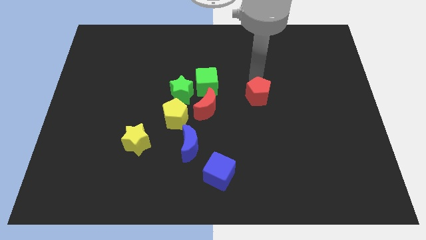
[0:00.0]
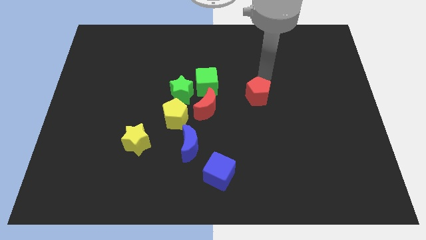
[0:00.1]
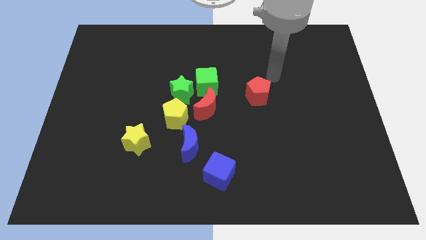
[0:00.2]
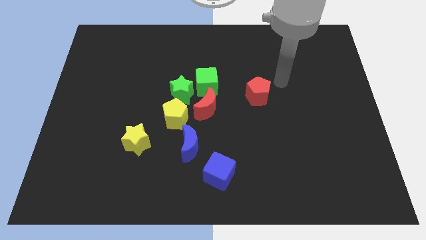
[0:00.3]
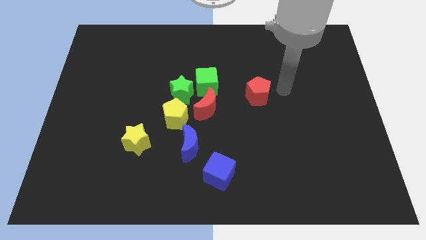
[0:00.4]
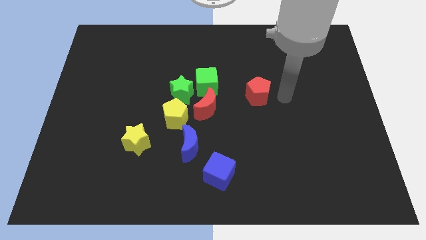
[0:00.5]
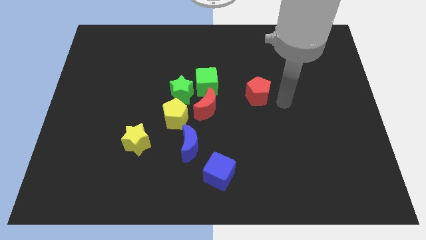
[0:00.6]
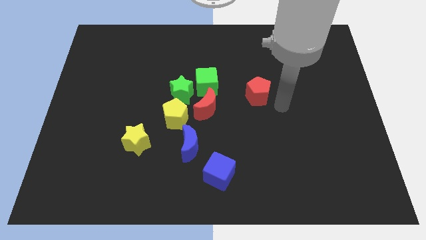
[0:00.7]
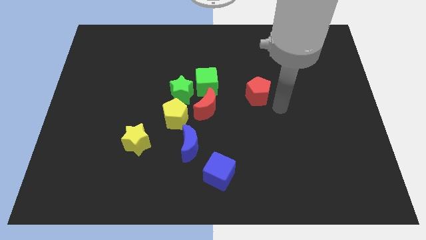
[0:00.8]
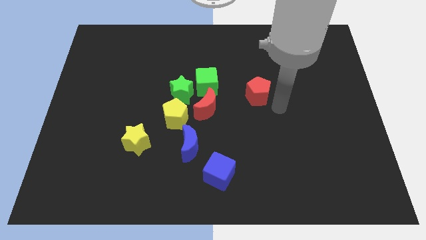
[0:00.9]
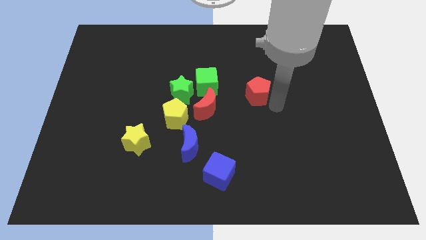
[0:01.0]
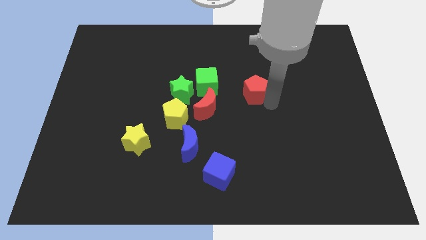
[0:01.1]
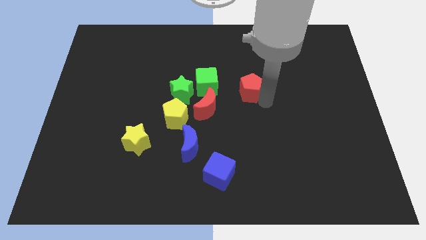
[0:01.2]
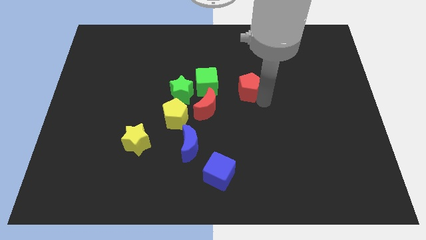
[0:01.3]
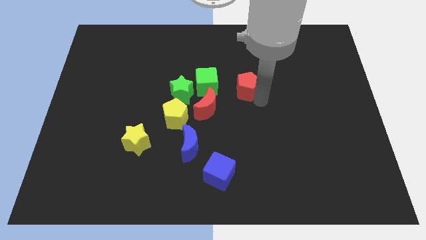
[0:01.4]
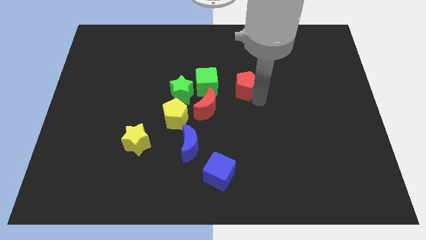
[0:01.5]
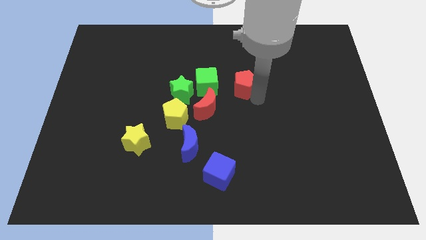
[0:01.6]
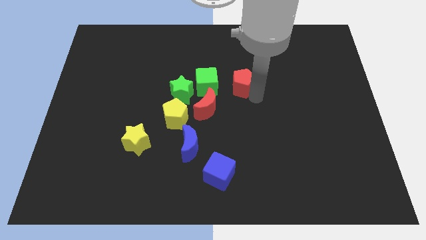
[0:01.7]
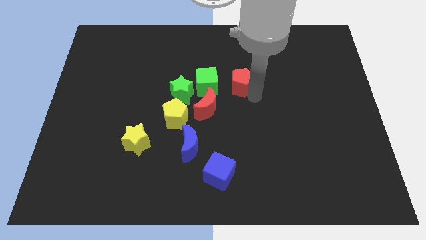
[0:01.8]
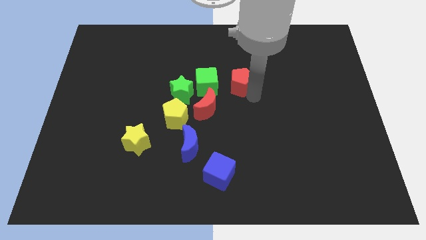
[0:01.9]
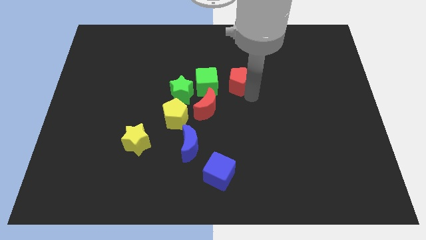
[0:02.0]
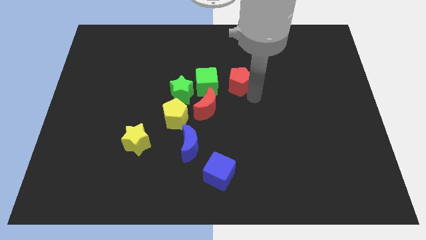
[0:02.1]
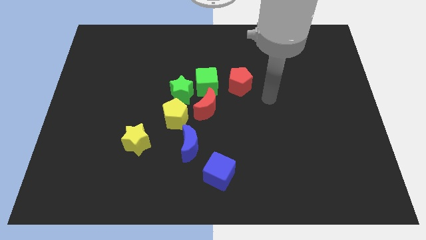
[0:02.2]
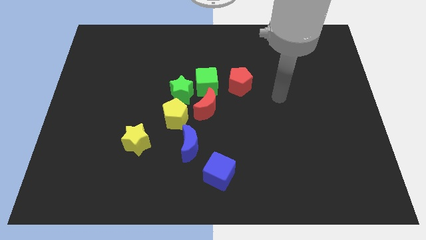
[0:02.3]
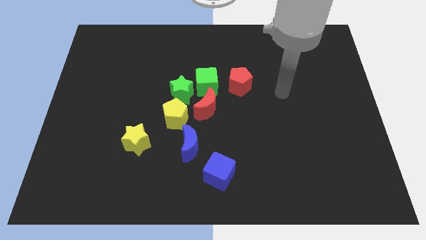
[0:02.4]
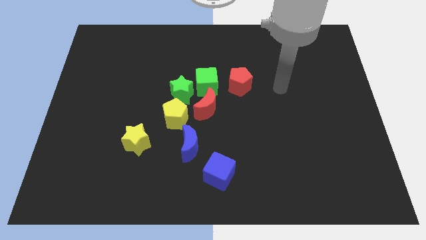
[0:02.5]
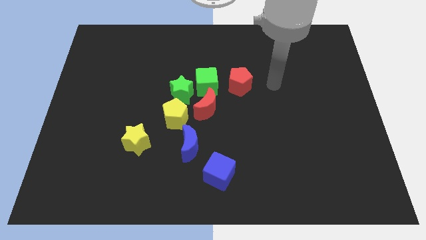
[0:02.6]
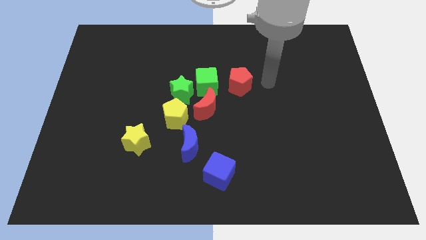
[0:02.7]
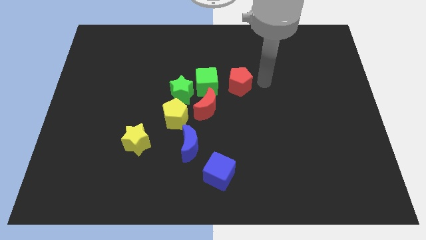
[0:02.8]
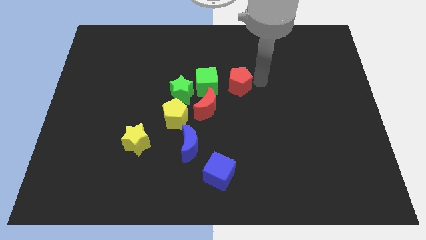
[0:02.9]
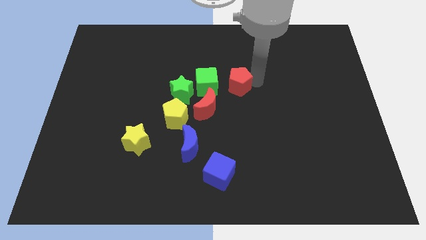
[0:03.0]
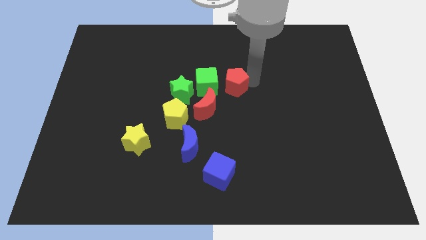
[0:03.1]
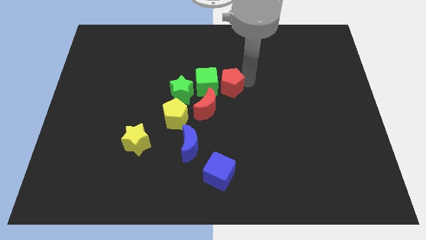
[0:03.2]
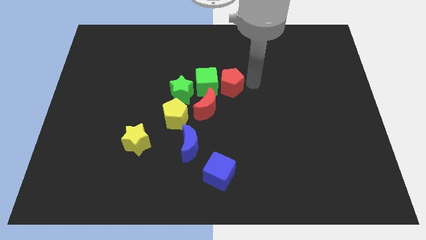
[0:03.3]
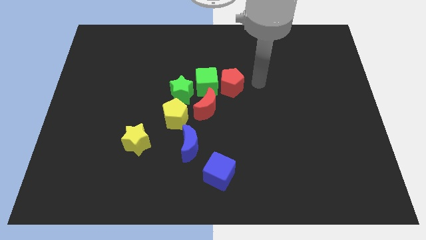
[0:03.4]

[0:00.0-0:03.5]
move the red pentagon to the right of the green cube

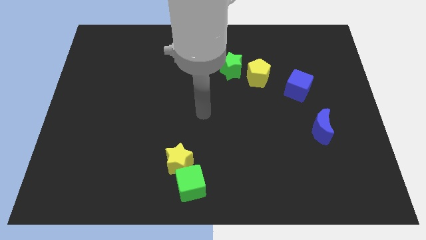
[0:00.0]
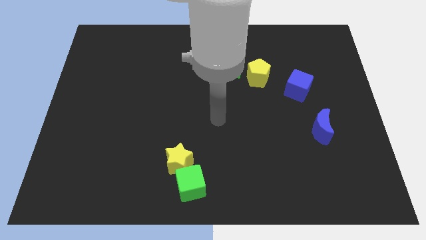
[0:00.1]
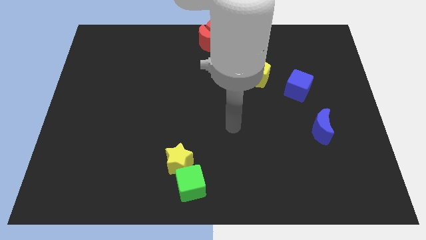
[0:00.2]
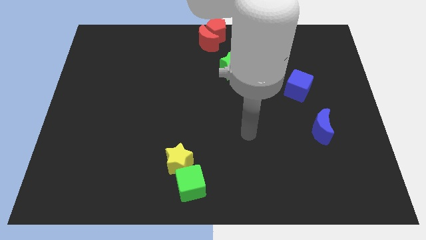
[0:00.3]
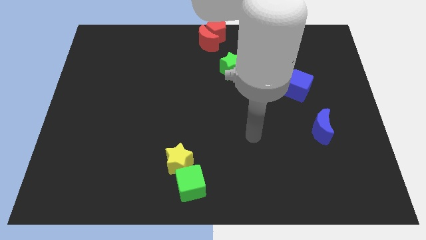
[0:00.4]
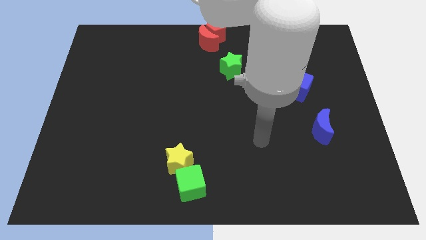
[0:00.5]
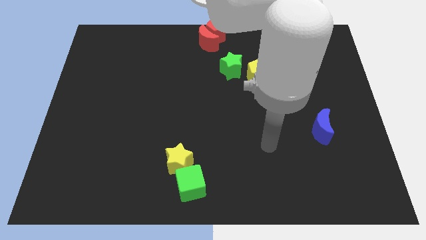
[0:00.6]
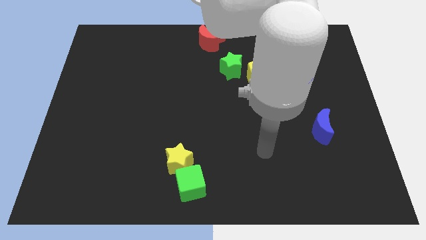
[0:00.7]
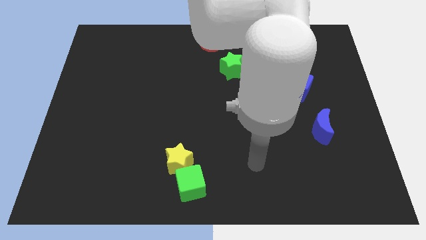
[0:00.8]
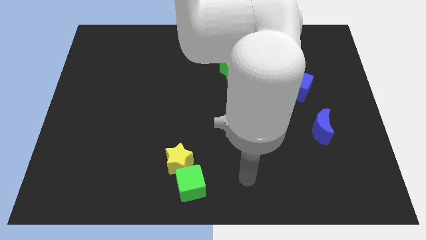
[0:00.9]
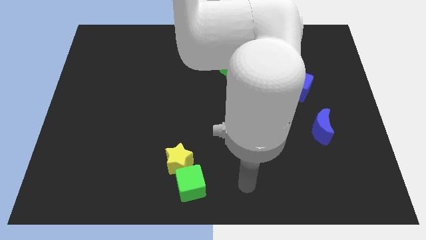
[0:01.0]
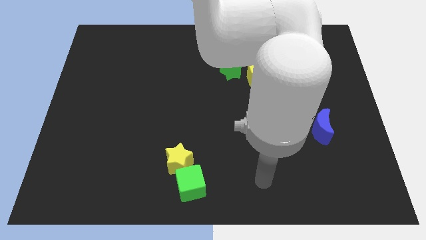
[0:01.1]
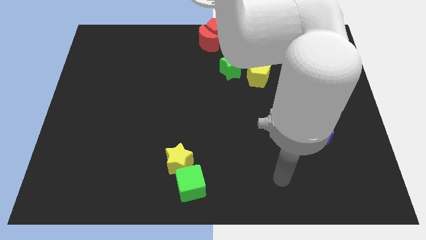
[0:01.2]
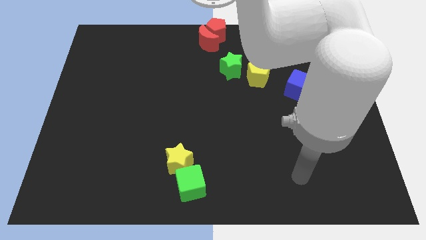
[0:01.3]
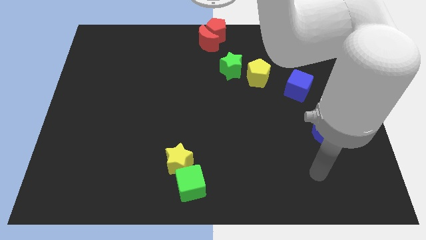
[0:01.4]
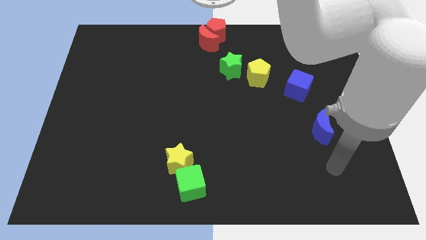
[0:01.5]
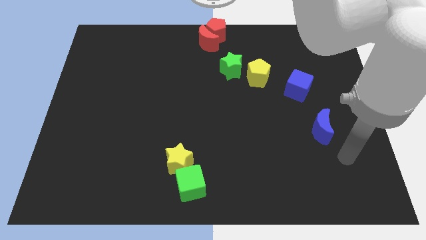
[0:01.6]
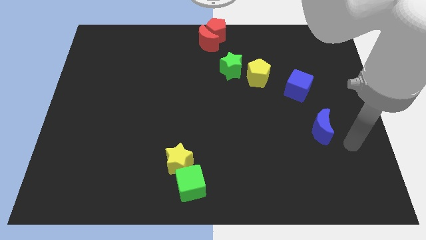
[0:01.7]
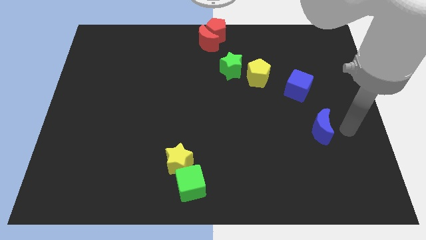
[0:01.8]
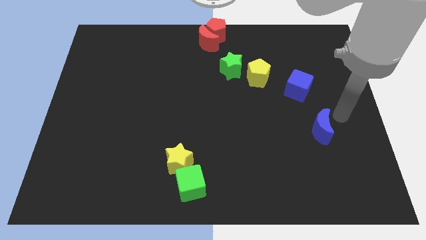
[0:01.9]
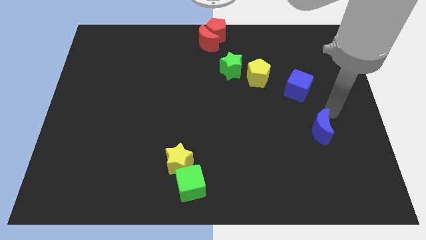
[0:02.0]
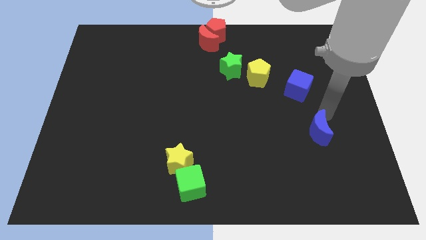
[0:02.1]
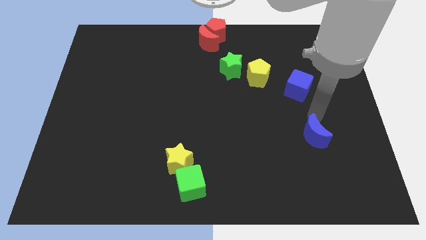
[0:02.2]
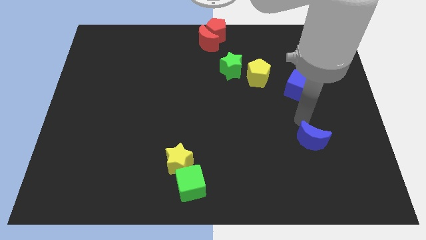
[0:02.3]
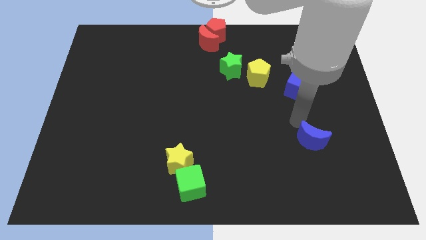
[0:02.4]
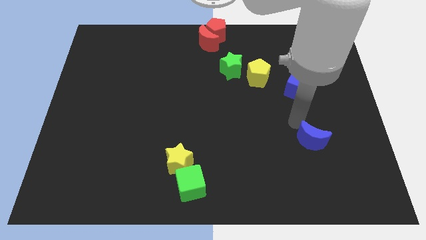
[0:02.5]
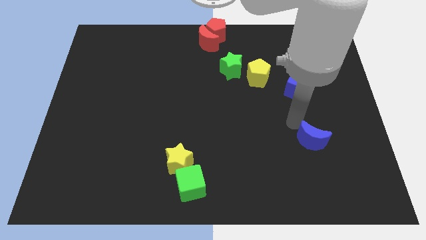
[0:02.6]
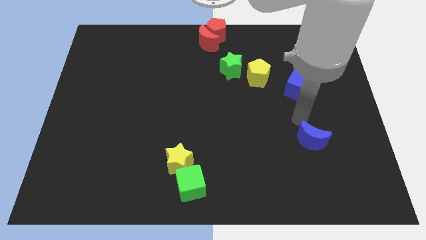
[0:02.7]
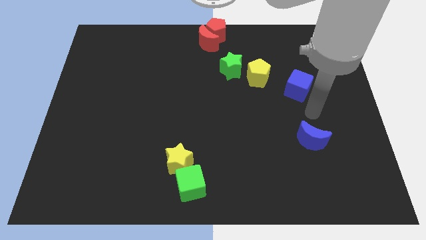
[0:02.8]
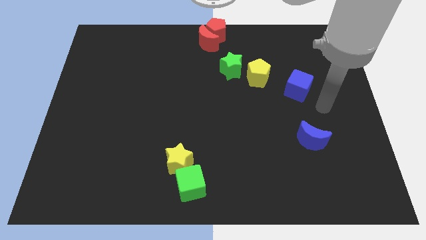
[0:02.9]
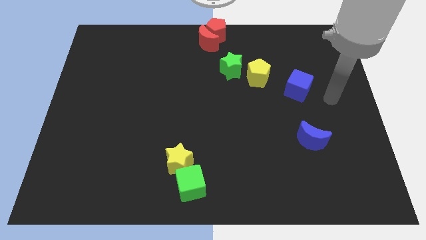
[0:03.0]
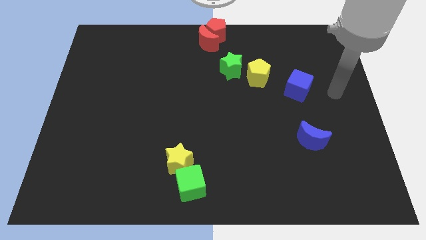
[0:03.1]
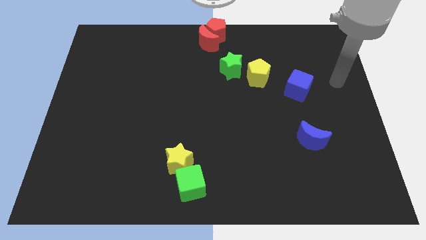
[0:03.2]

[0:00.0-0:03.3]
slightly move down the blue moon

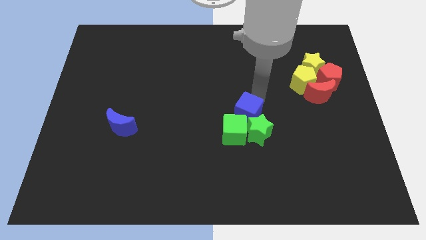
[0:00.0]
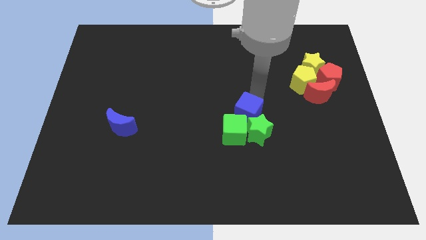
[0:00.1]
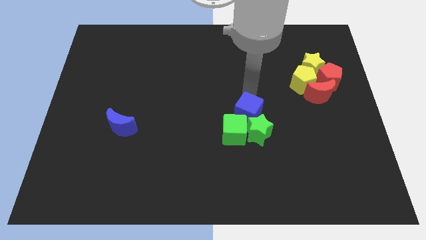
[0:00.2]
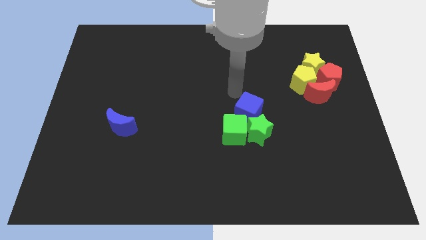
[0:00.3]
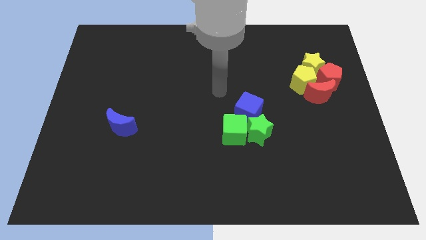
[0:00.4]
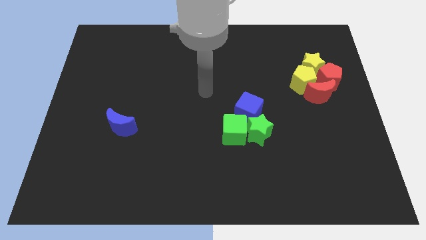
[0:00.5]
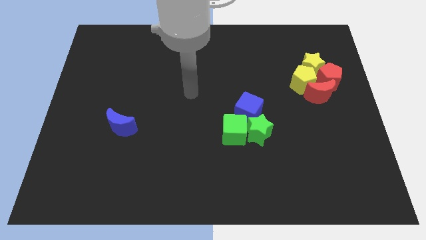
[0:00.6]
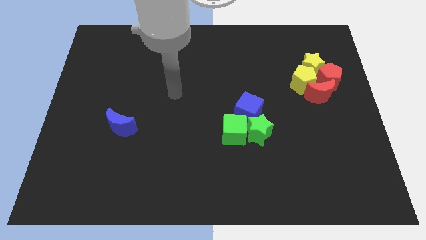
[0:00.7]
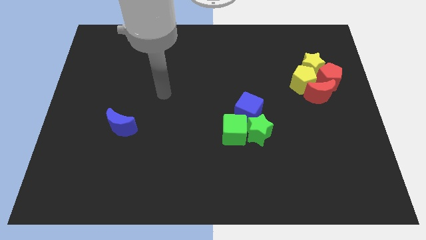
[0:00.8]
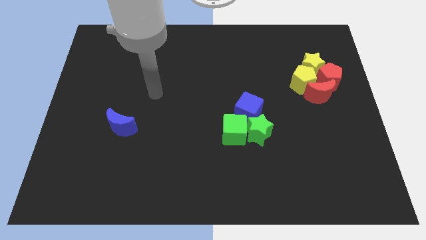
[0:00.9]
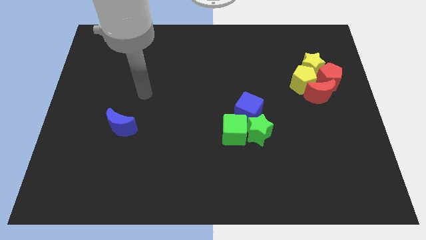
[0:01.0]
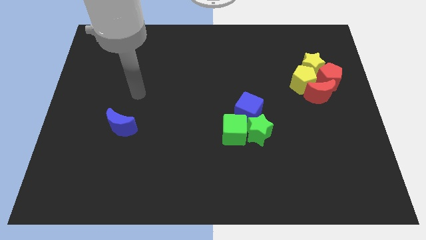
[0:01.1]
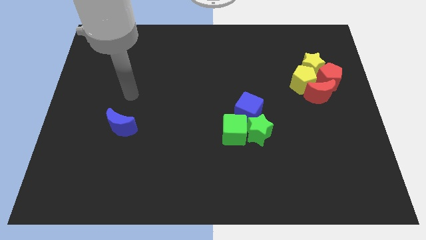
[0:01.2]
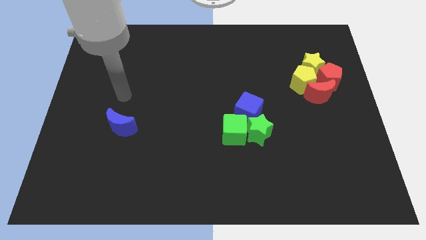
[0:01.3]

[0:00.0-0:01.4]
place your arm near blue moon

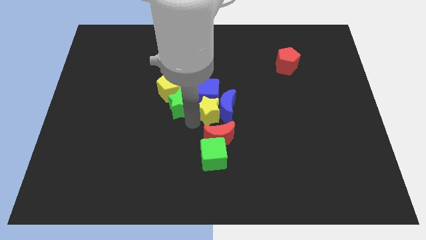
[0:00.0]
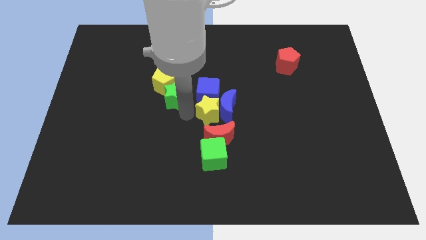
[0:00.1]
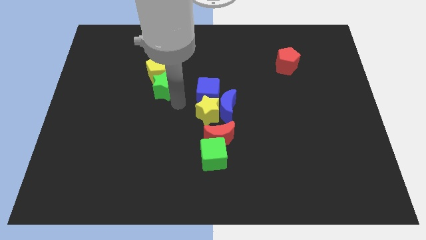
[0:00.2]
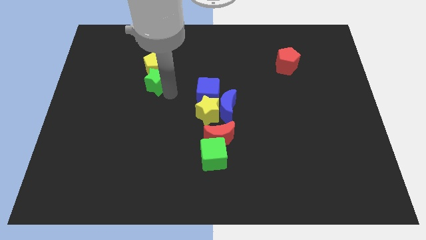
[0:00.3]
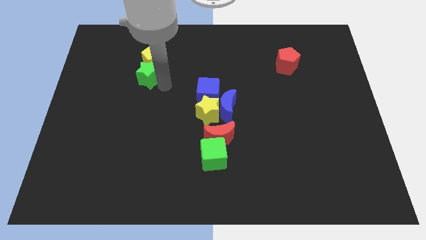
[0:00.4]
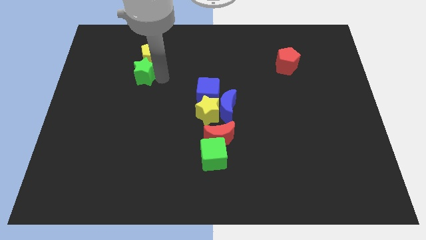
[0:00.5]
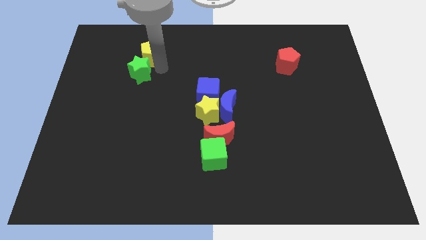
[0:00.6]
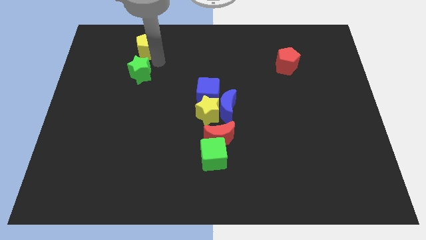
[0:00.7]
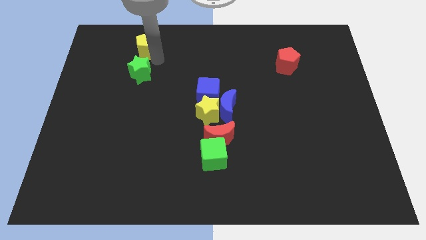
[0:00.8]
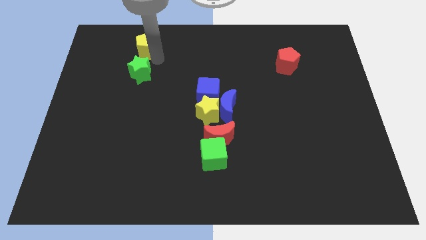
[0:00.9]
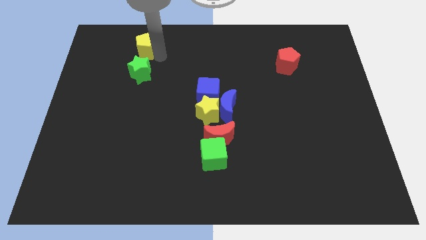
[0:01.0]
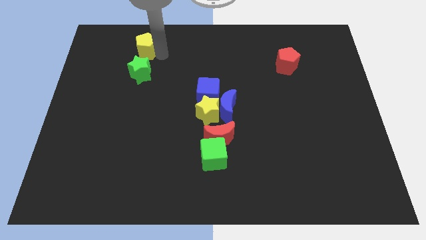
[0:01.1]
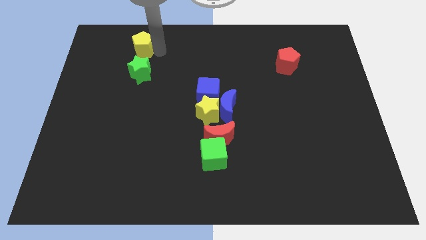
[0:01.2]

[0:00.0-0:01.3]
push the yellow pentagon to the top of the green star
